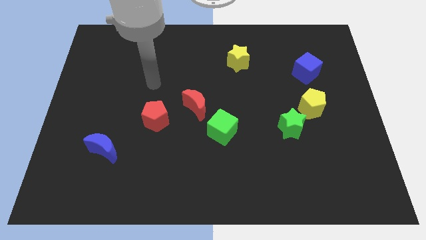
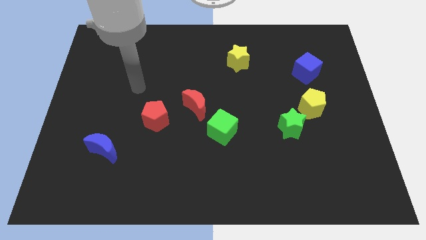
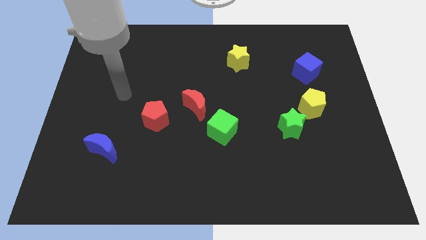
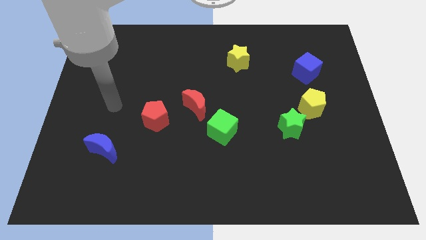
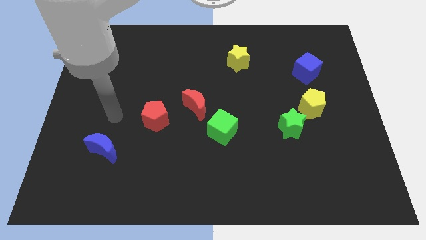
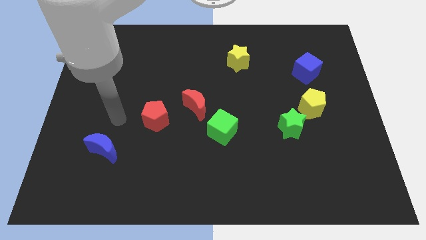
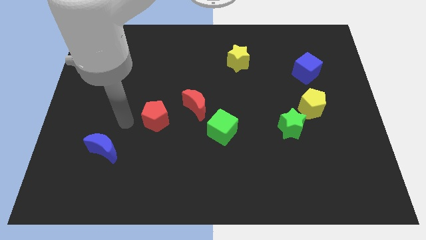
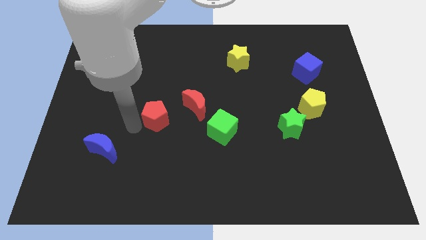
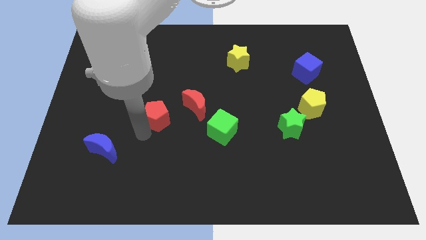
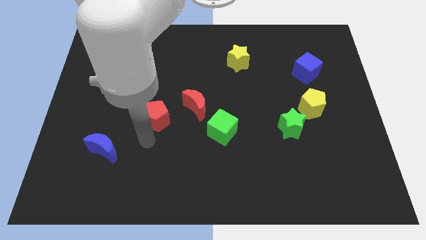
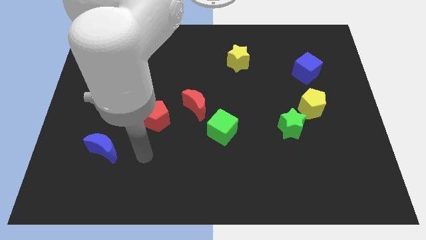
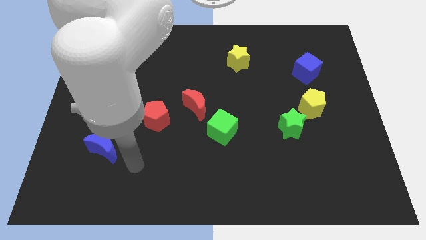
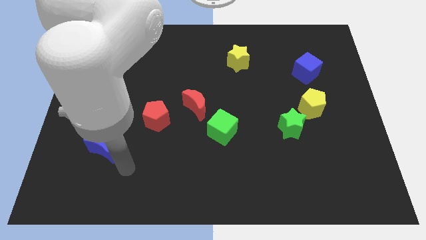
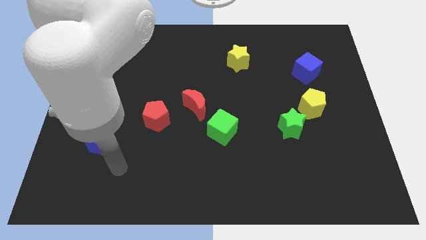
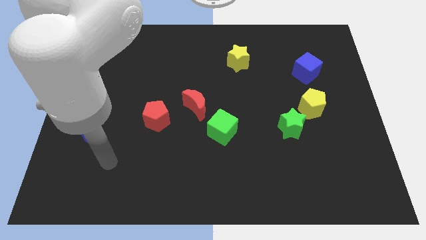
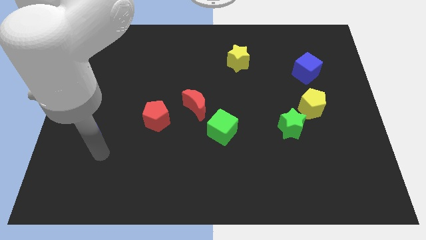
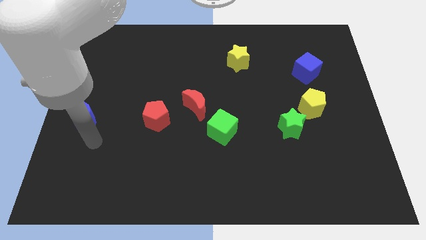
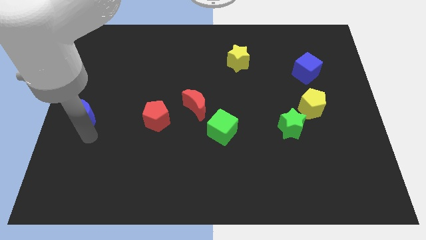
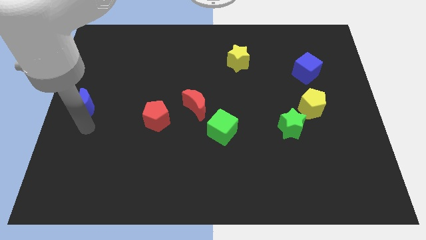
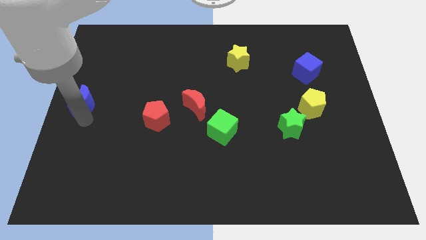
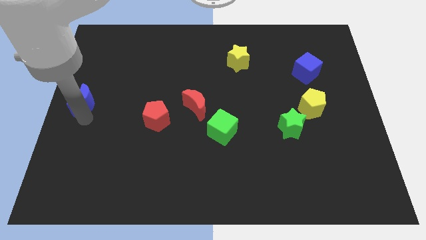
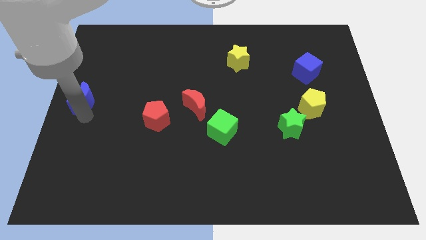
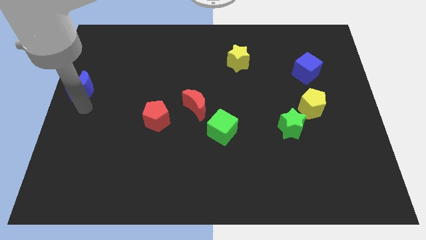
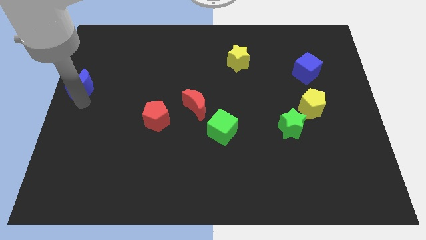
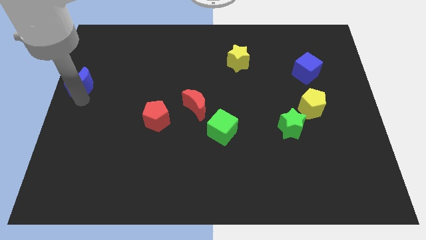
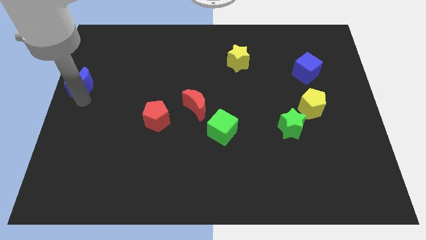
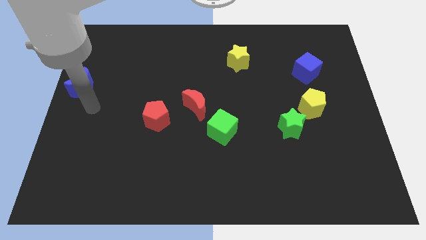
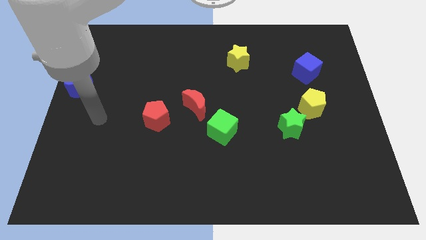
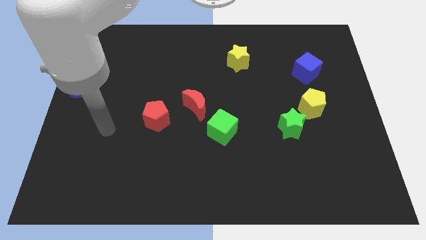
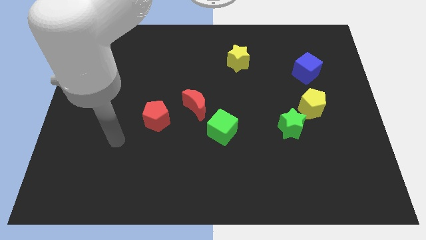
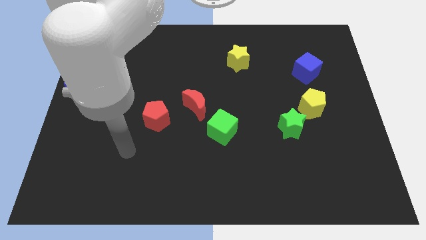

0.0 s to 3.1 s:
push the blue moon towards the top left corner

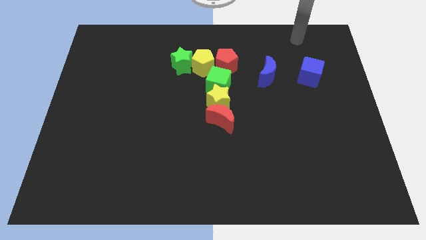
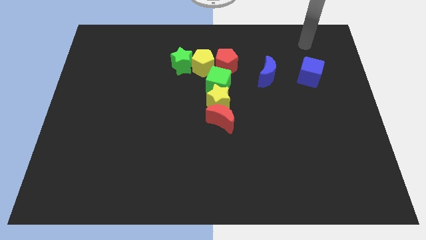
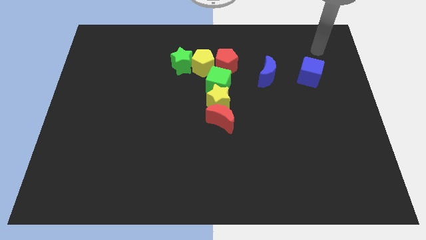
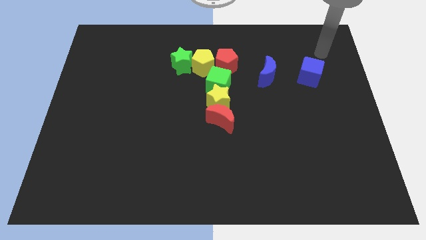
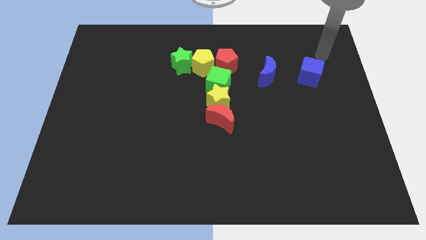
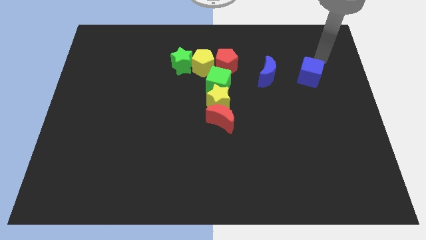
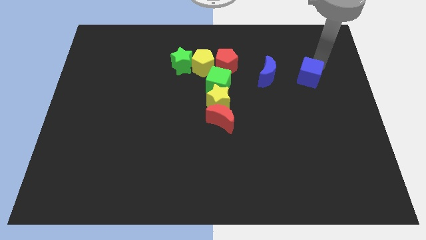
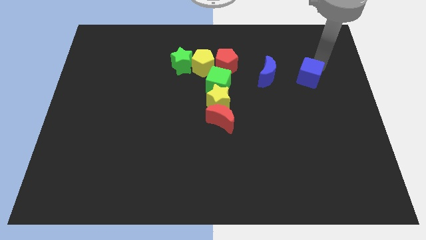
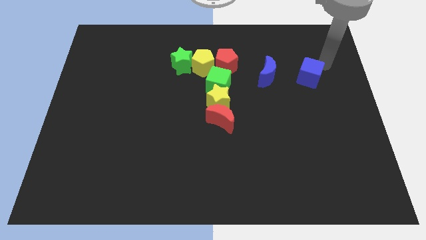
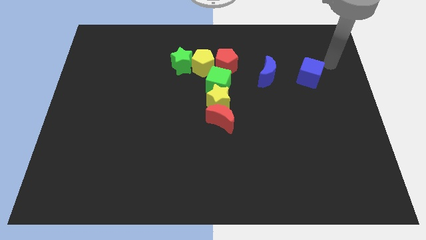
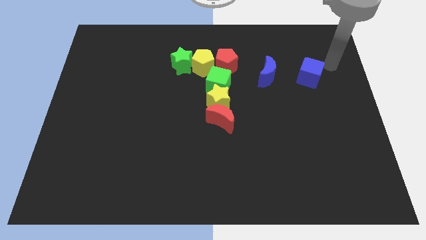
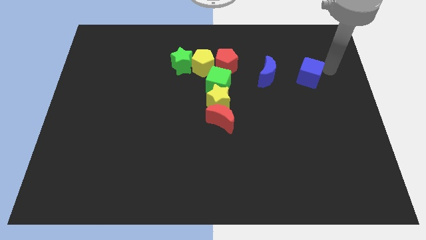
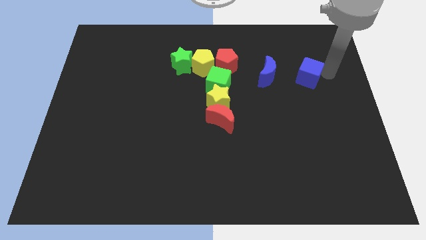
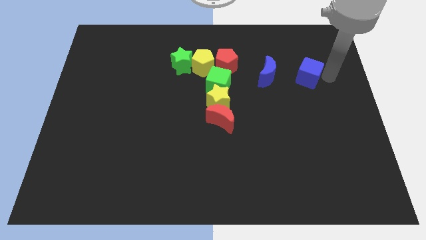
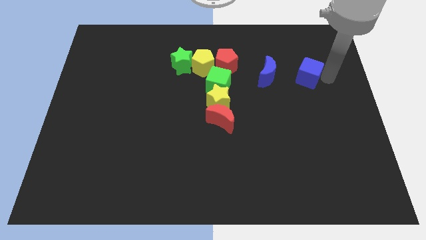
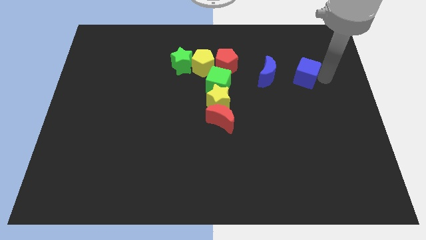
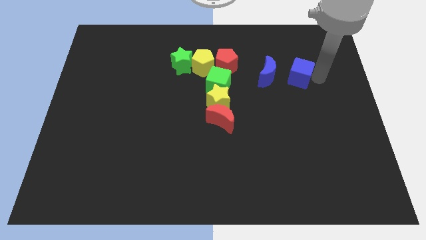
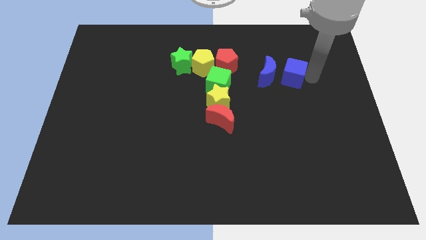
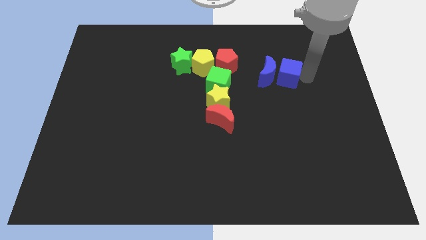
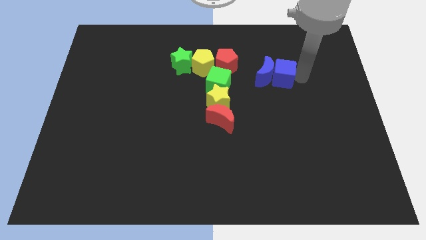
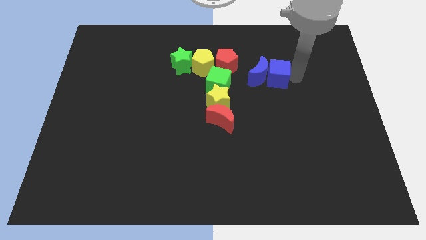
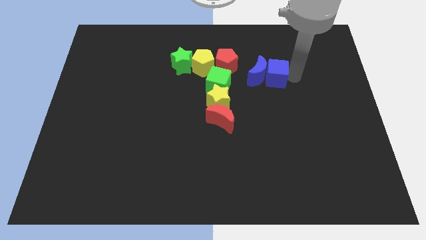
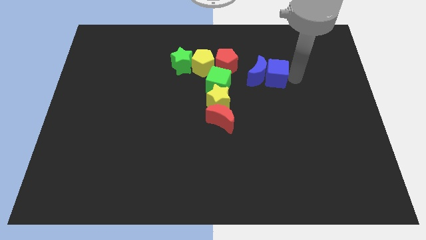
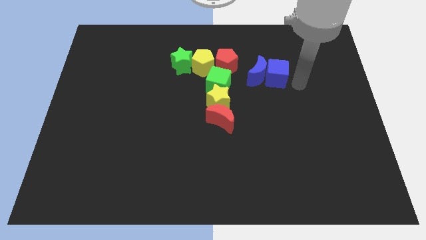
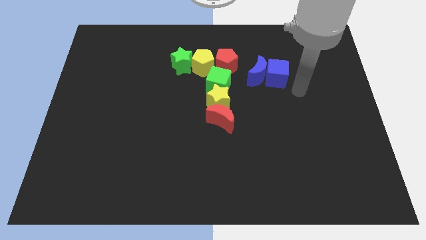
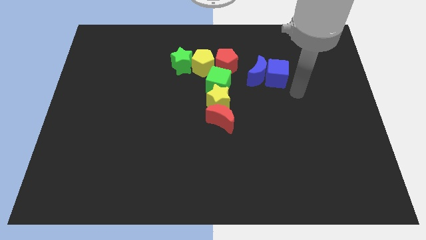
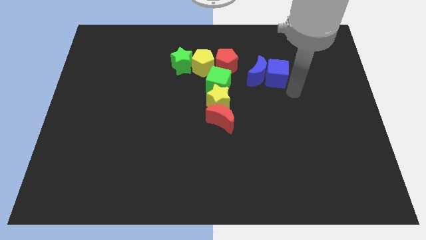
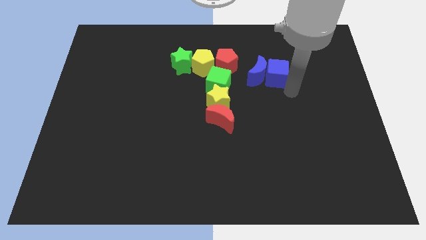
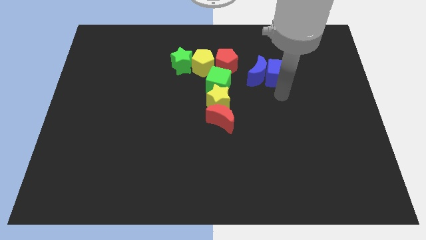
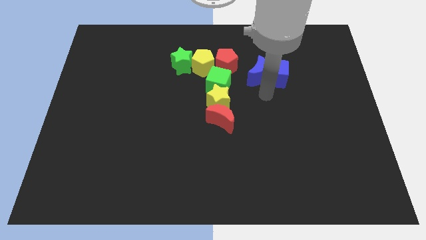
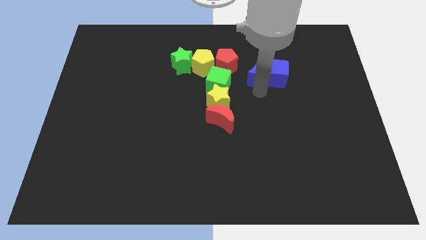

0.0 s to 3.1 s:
slide blue cube into blue moon

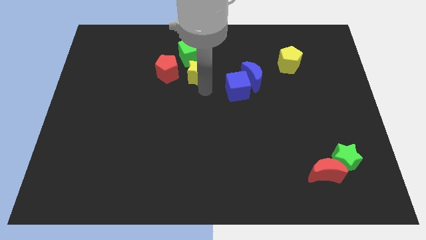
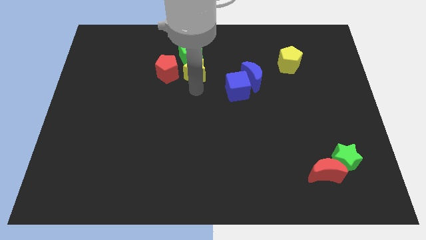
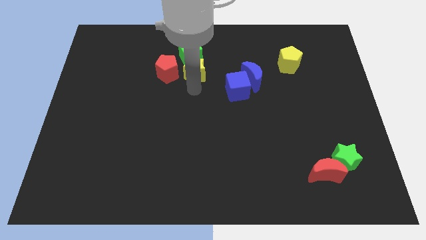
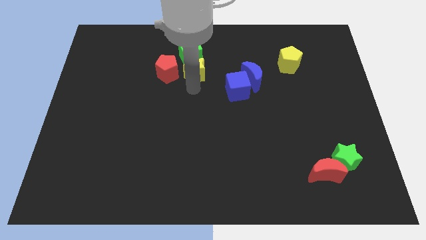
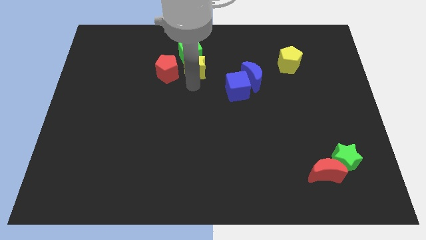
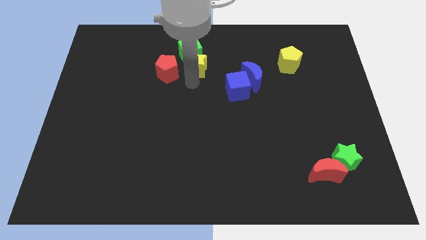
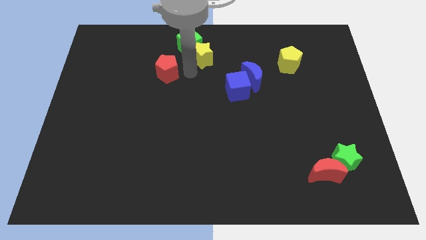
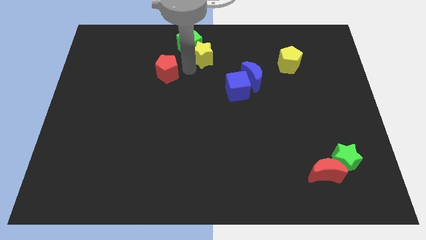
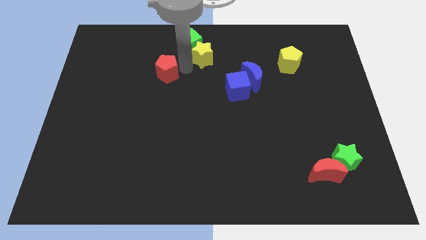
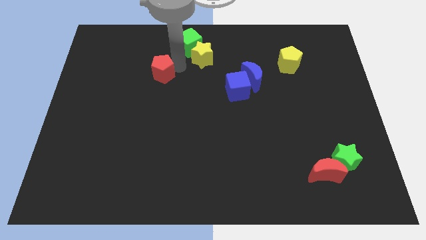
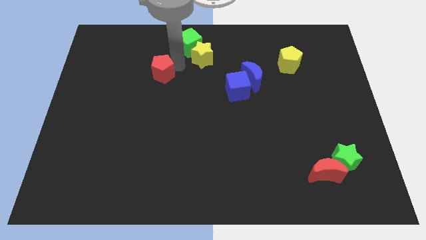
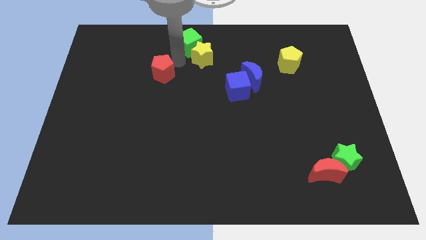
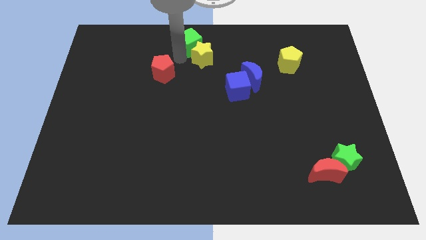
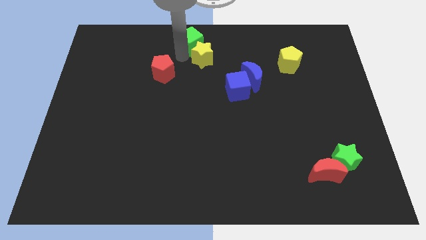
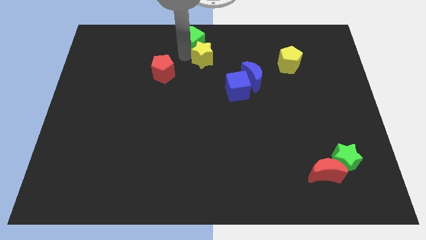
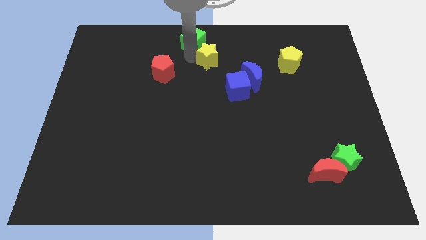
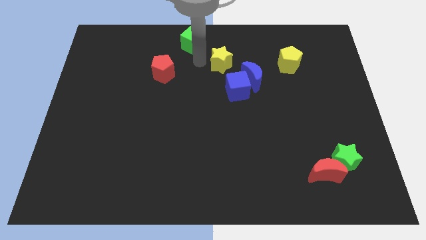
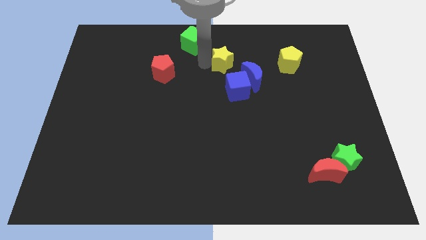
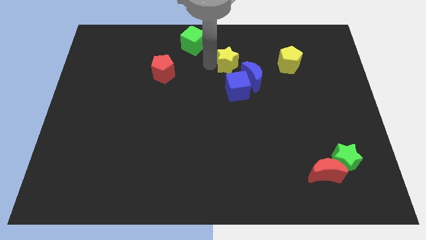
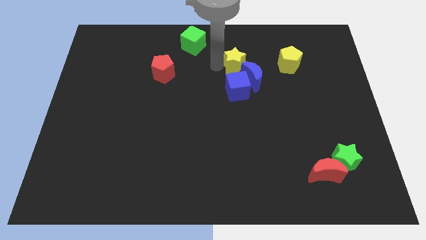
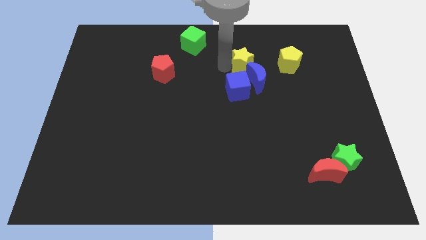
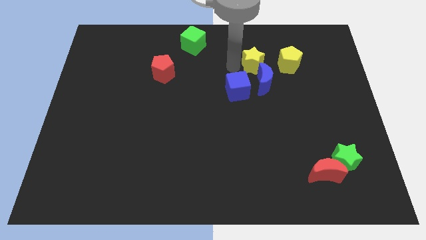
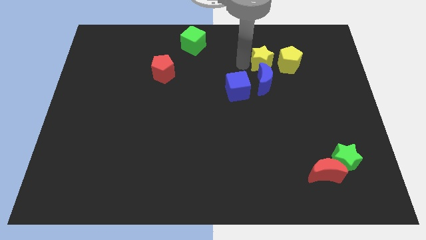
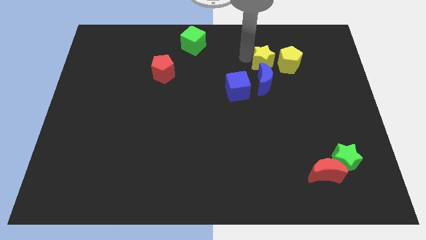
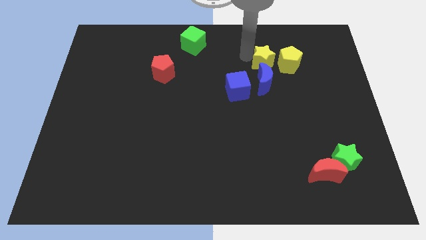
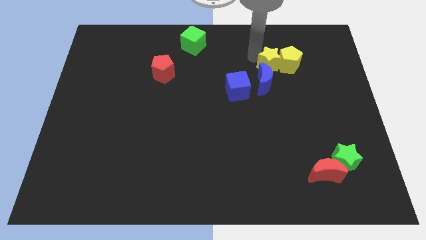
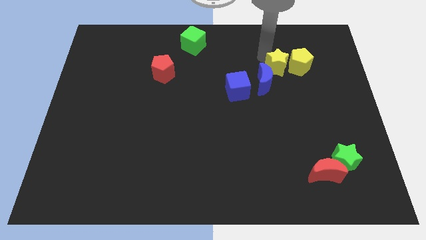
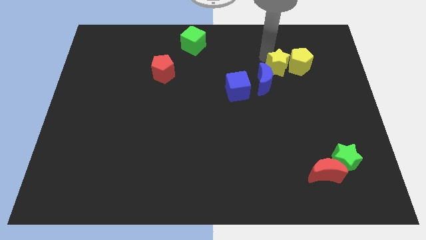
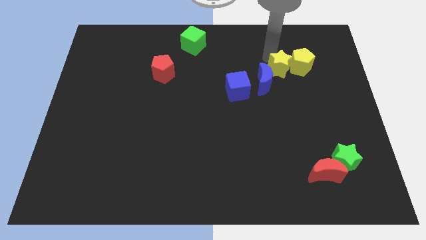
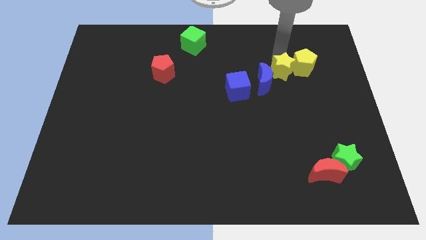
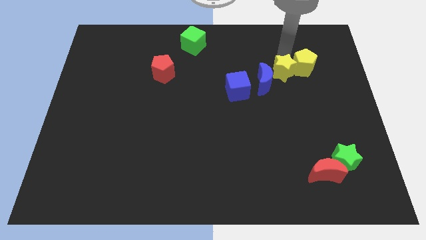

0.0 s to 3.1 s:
separate yellow star from red pentagon and green cube
